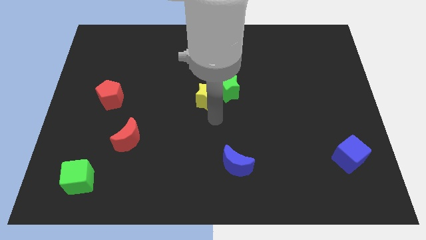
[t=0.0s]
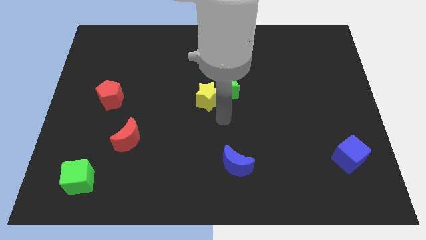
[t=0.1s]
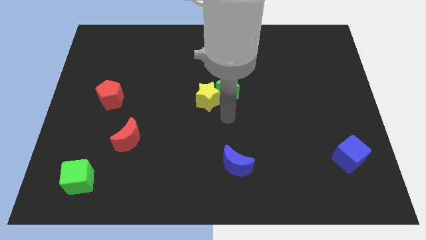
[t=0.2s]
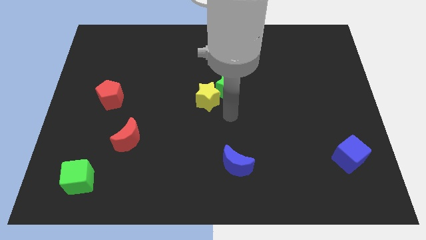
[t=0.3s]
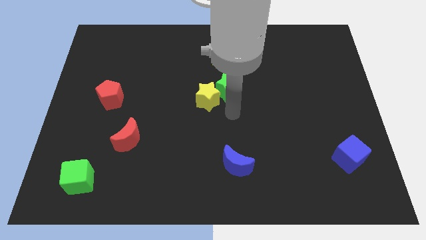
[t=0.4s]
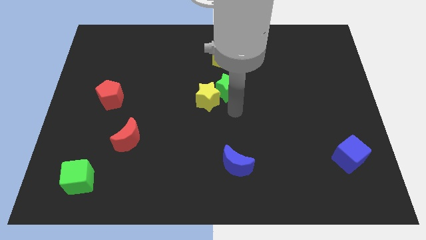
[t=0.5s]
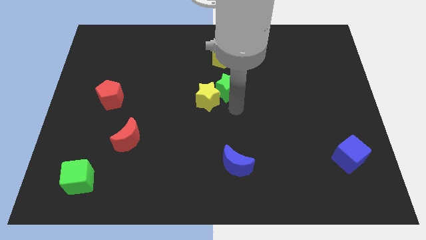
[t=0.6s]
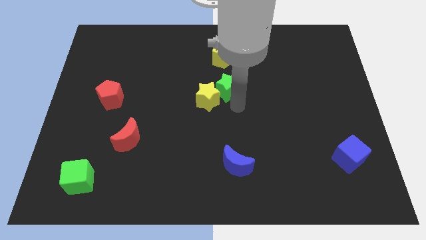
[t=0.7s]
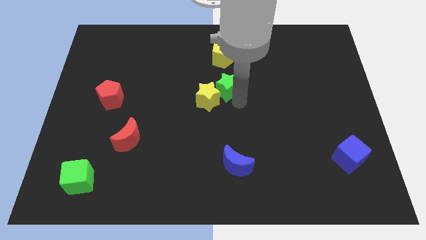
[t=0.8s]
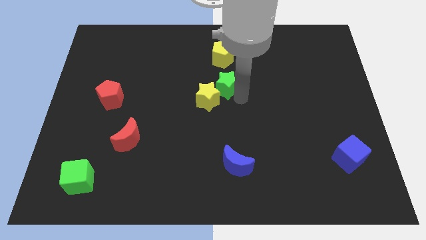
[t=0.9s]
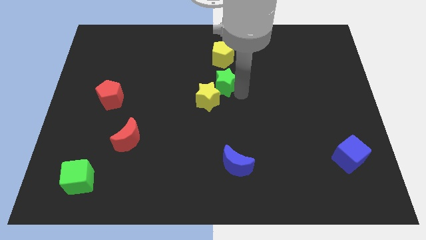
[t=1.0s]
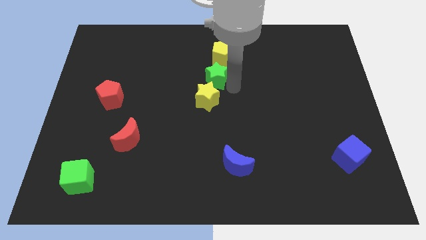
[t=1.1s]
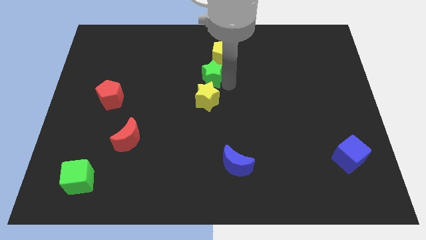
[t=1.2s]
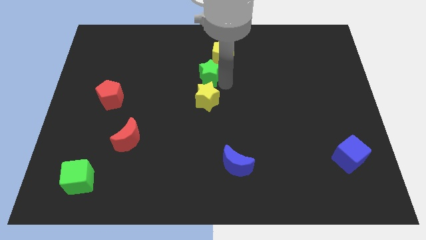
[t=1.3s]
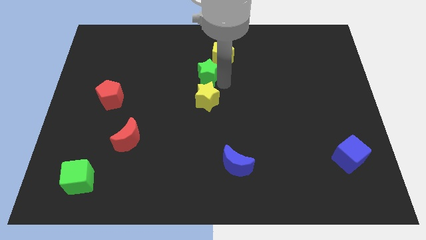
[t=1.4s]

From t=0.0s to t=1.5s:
move the green star above to the yellow star

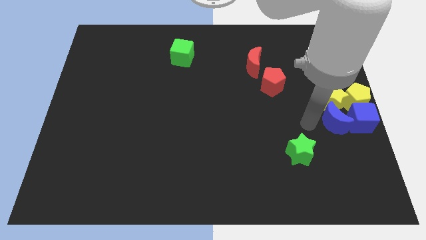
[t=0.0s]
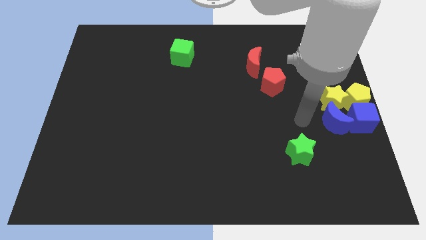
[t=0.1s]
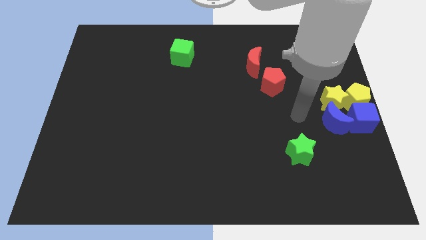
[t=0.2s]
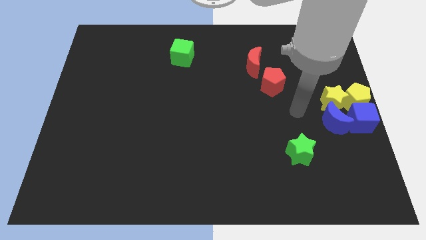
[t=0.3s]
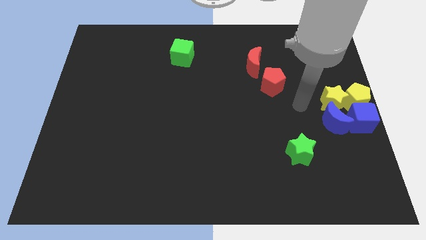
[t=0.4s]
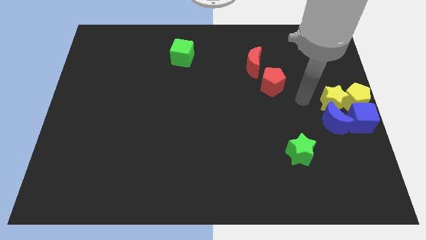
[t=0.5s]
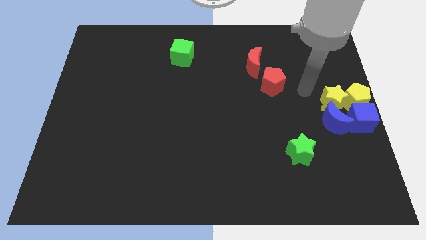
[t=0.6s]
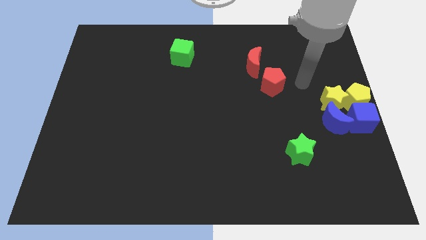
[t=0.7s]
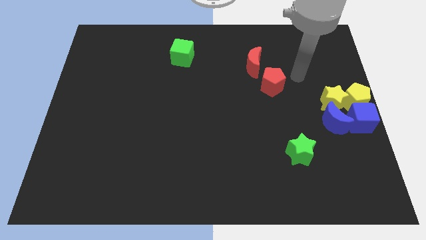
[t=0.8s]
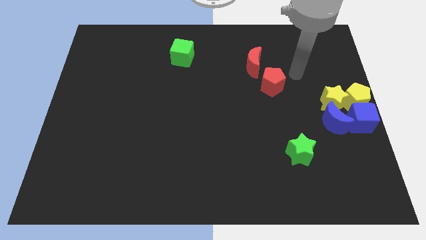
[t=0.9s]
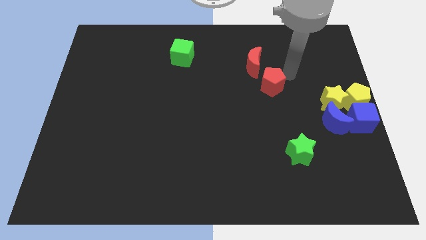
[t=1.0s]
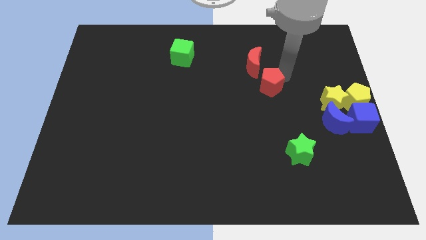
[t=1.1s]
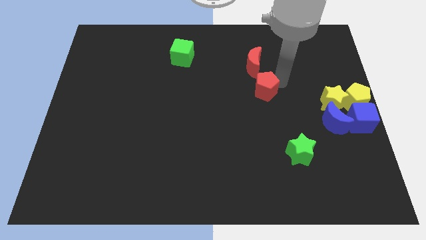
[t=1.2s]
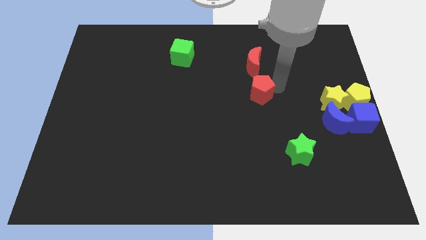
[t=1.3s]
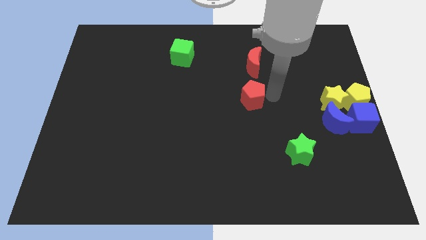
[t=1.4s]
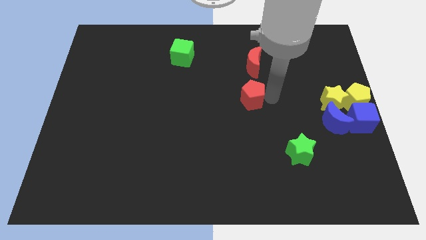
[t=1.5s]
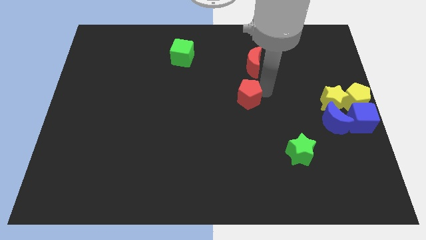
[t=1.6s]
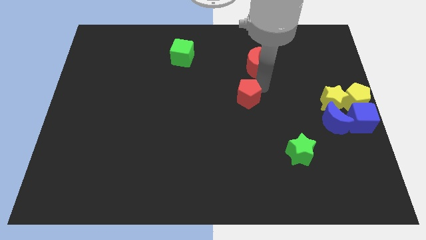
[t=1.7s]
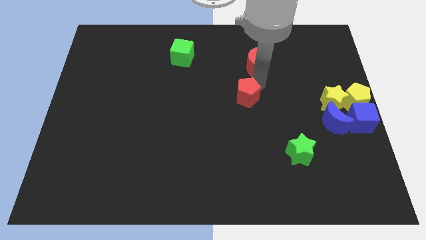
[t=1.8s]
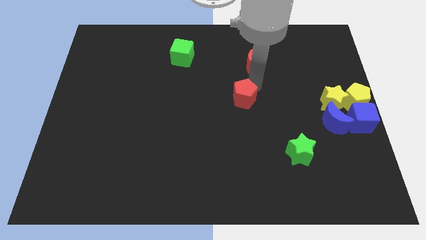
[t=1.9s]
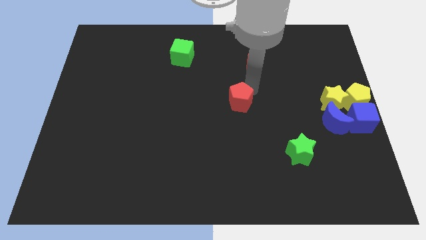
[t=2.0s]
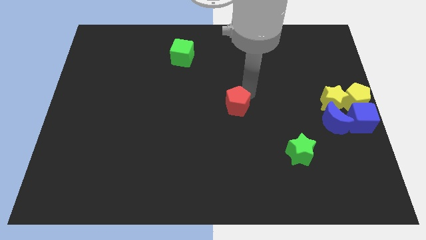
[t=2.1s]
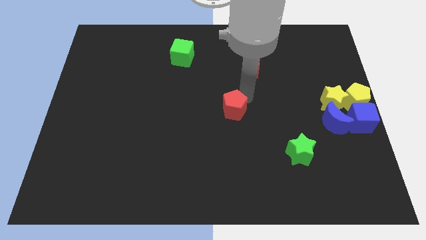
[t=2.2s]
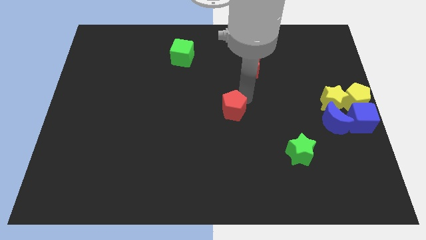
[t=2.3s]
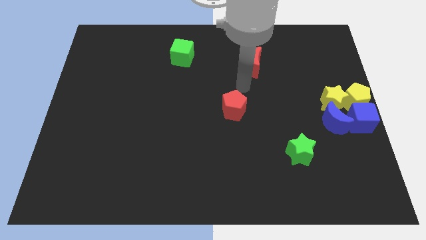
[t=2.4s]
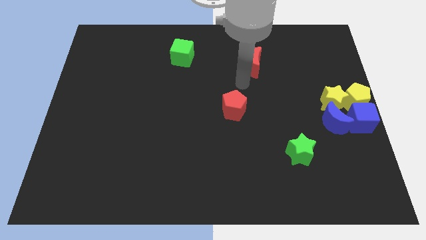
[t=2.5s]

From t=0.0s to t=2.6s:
place the red pentagon at center of the board

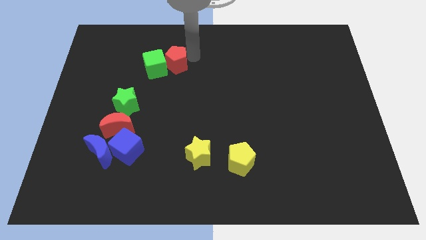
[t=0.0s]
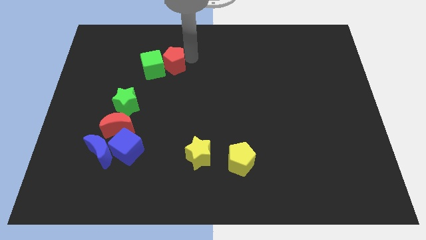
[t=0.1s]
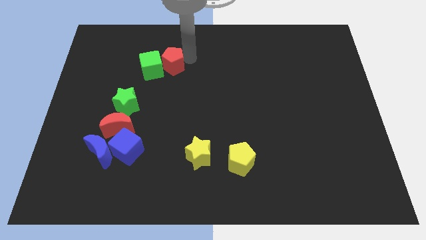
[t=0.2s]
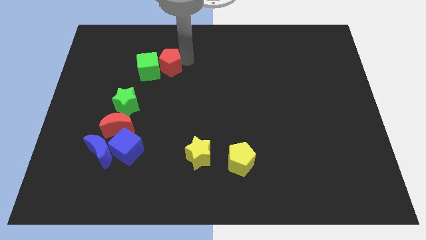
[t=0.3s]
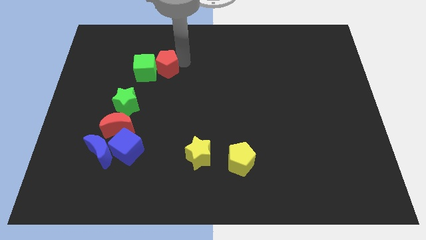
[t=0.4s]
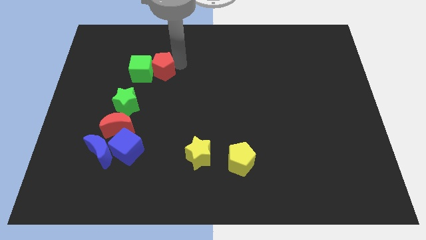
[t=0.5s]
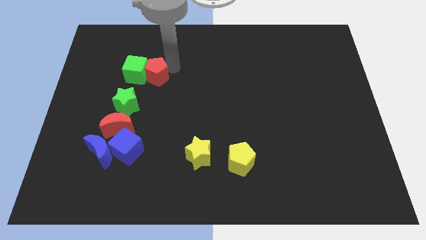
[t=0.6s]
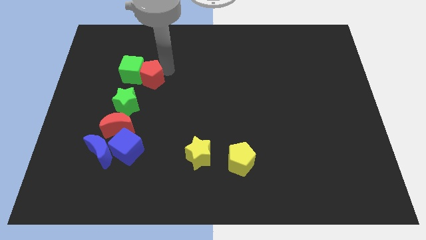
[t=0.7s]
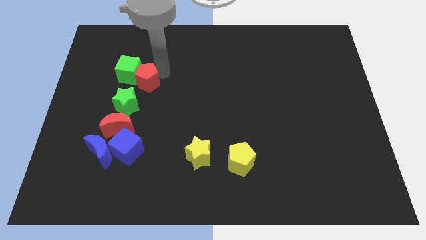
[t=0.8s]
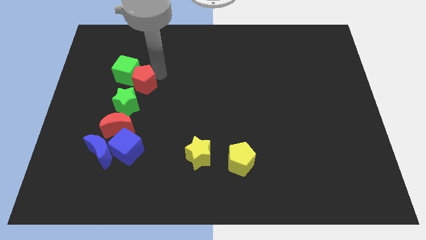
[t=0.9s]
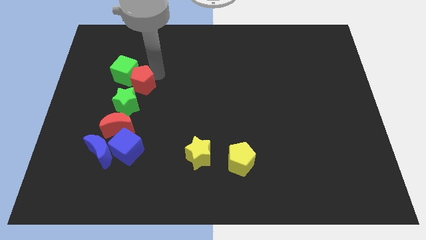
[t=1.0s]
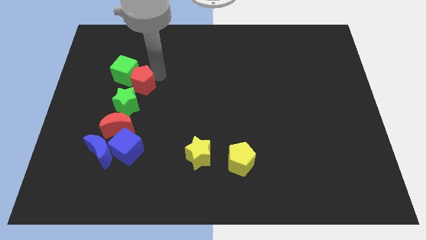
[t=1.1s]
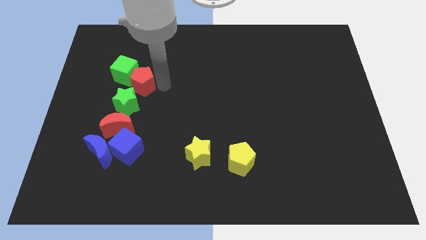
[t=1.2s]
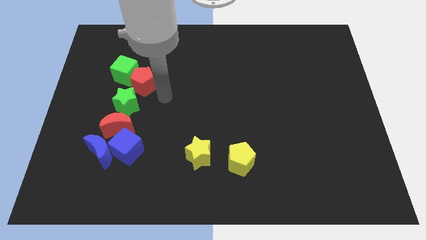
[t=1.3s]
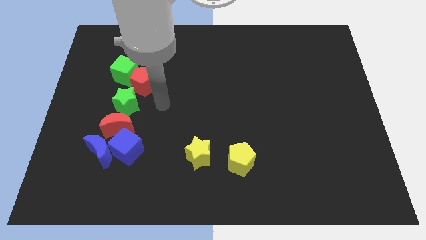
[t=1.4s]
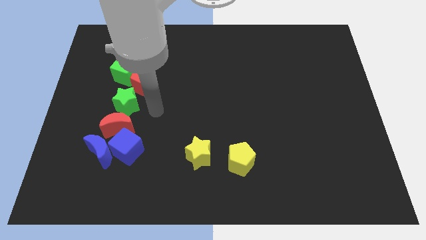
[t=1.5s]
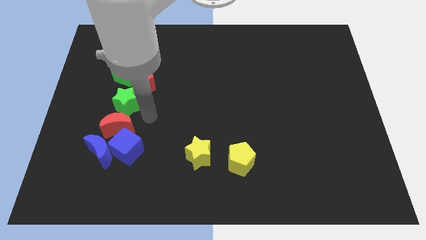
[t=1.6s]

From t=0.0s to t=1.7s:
place the red pentagon and the green cube above the green star

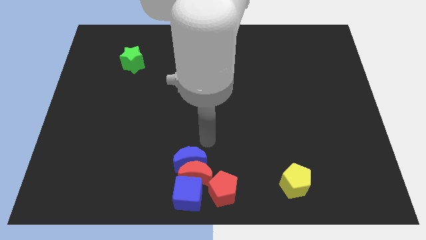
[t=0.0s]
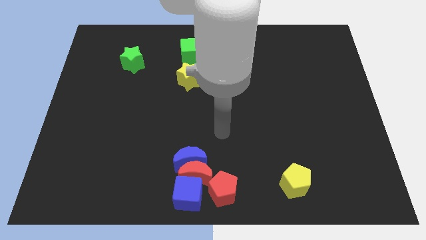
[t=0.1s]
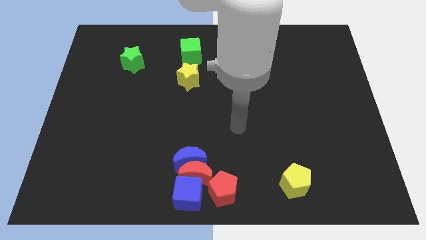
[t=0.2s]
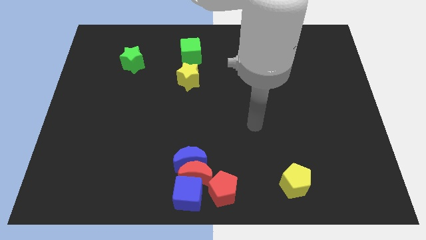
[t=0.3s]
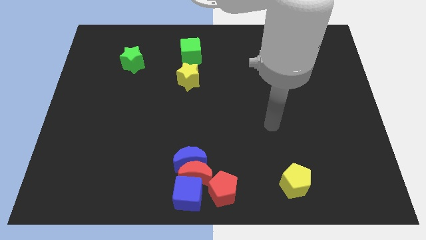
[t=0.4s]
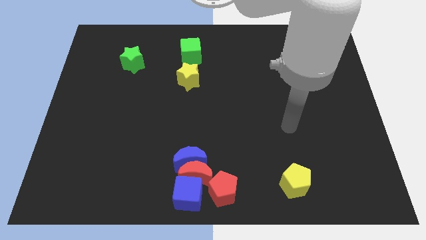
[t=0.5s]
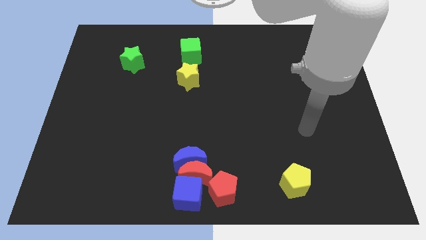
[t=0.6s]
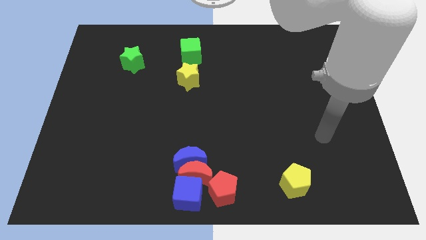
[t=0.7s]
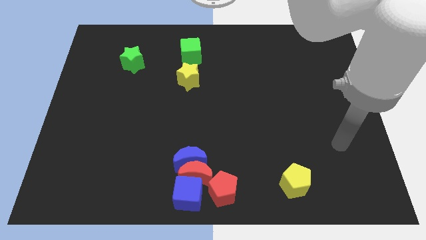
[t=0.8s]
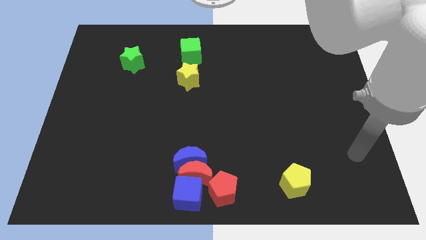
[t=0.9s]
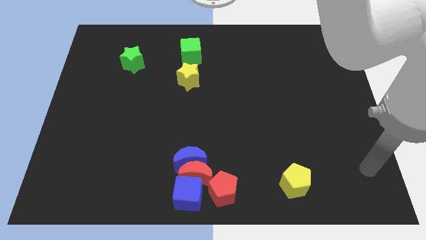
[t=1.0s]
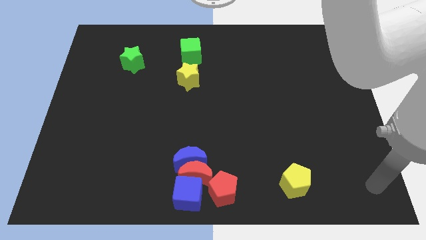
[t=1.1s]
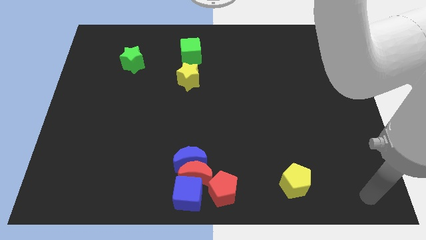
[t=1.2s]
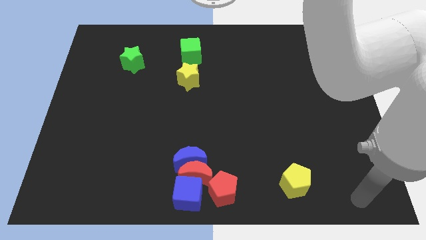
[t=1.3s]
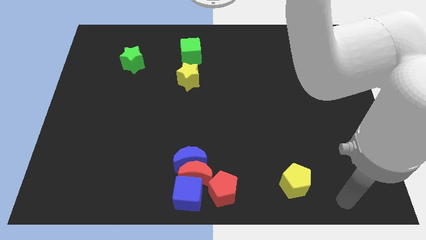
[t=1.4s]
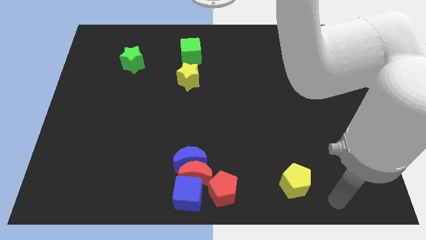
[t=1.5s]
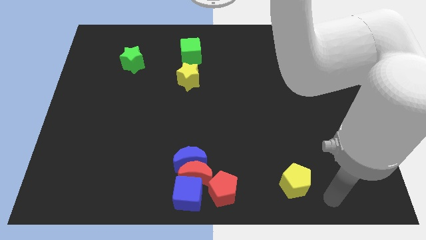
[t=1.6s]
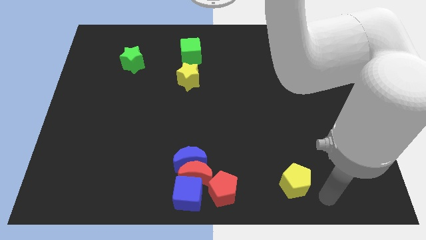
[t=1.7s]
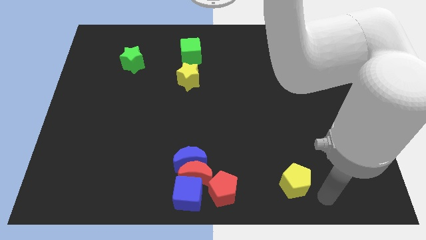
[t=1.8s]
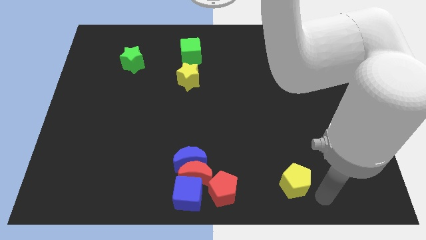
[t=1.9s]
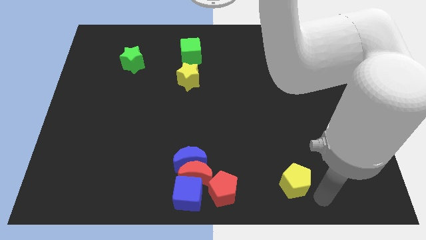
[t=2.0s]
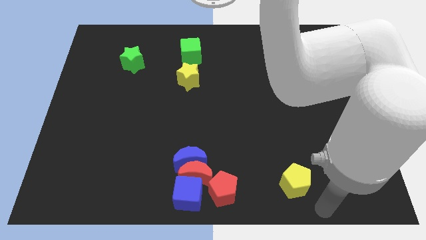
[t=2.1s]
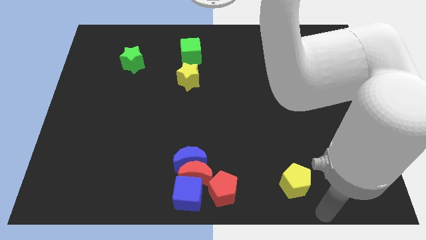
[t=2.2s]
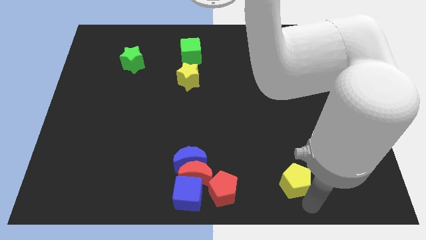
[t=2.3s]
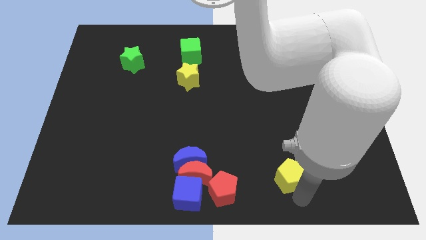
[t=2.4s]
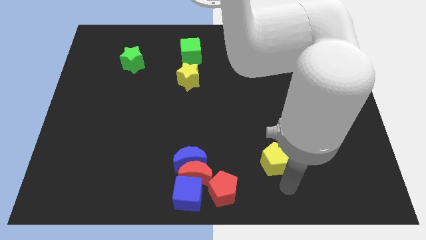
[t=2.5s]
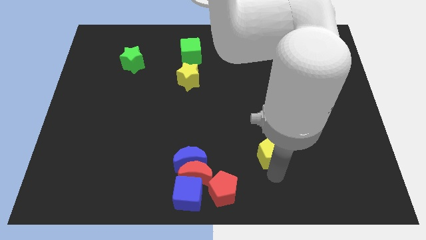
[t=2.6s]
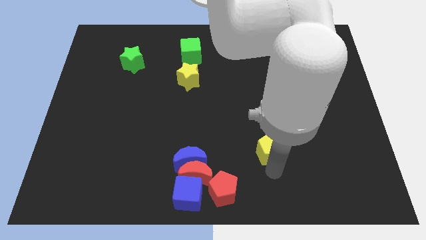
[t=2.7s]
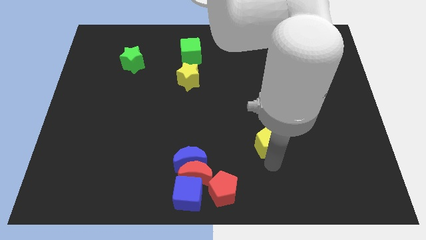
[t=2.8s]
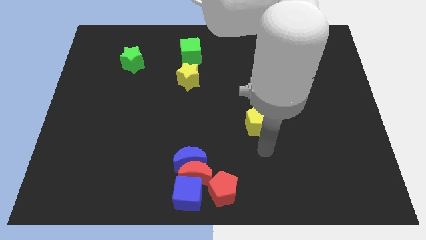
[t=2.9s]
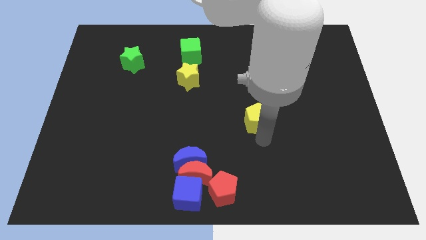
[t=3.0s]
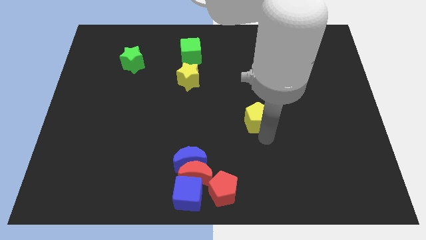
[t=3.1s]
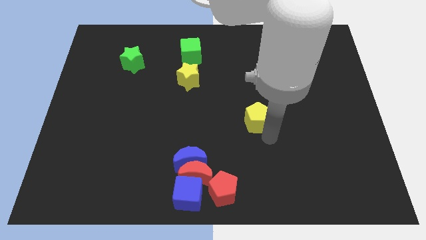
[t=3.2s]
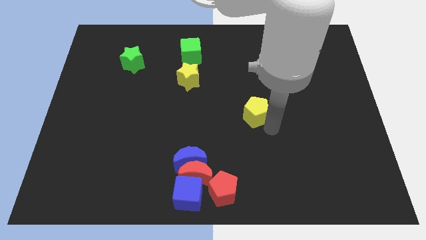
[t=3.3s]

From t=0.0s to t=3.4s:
tap the yellow pentagon
